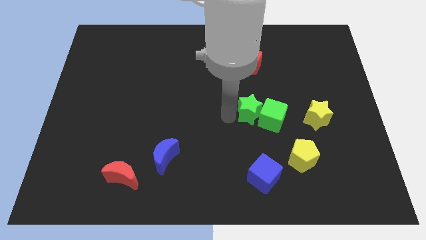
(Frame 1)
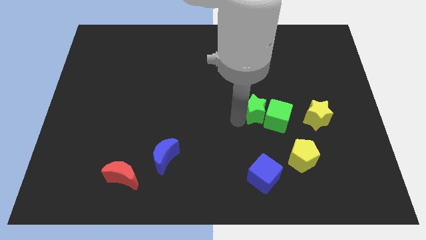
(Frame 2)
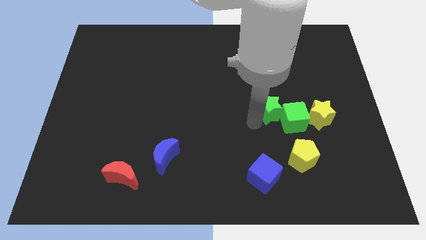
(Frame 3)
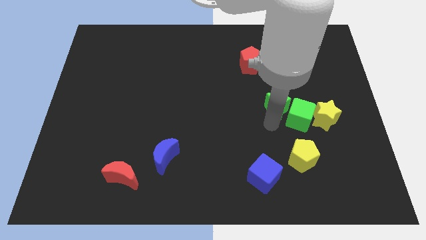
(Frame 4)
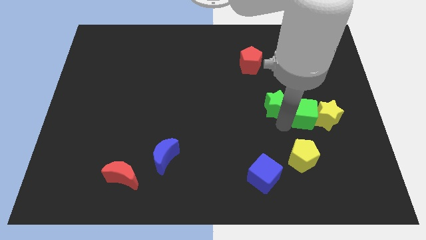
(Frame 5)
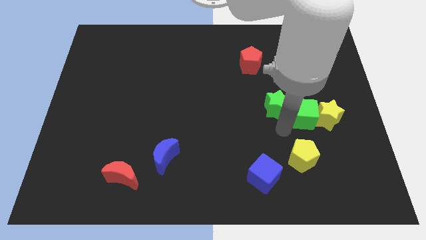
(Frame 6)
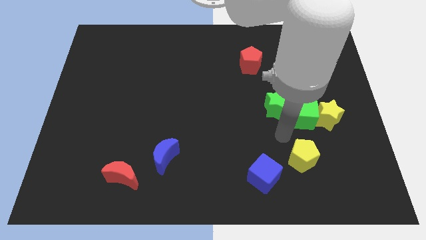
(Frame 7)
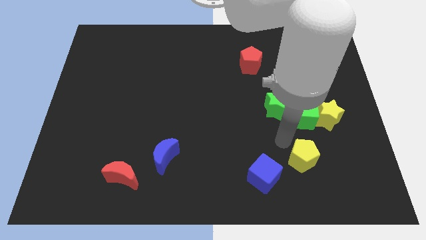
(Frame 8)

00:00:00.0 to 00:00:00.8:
move green blocks to the left of the yellow star

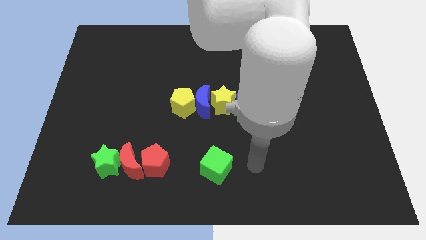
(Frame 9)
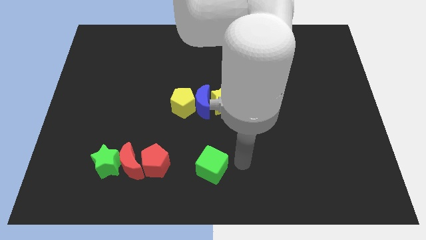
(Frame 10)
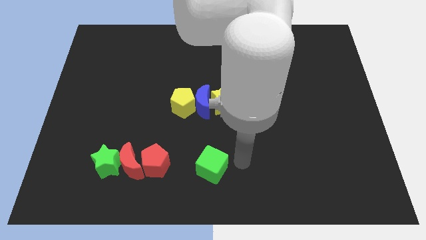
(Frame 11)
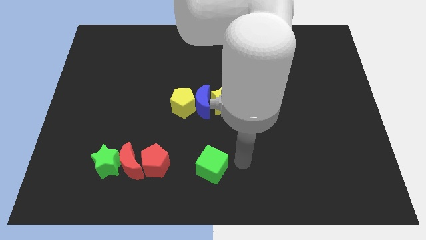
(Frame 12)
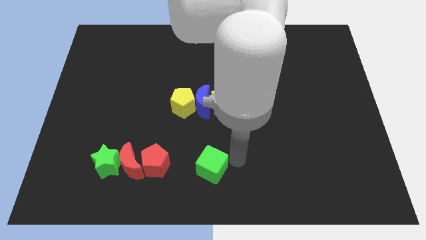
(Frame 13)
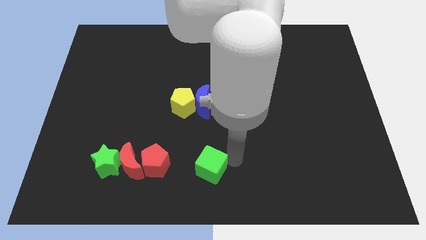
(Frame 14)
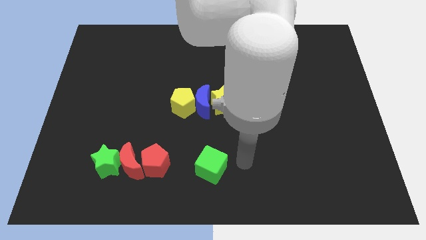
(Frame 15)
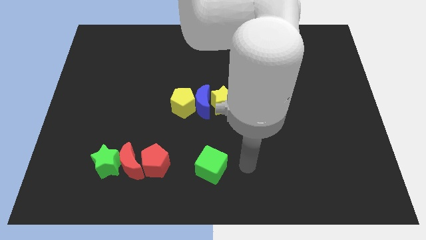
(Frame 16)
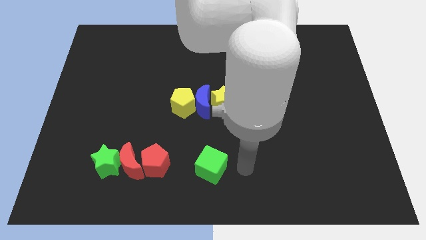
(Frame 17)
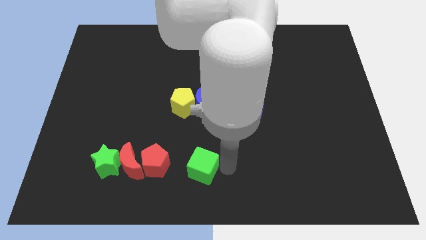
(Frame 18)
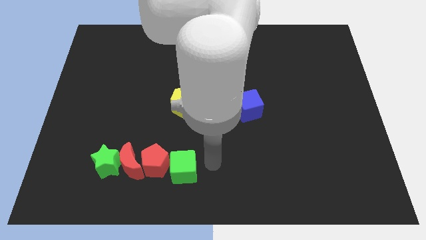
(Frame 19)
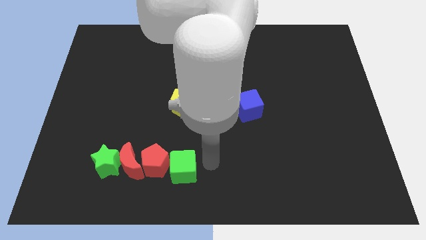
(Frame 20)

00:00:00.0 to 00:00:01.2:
place the green cube to the right of the red pentagon to form a horizontal line of blocks

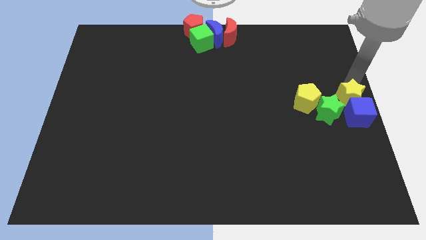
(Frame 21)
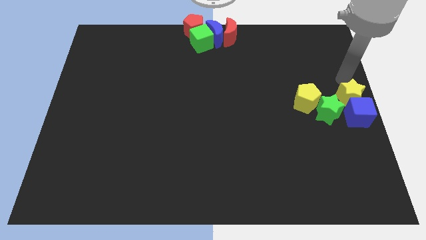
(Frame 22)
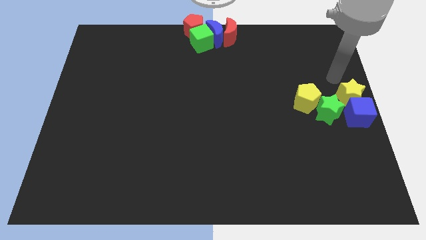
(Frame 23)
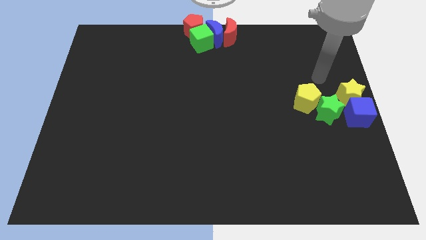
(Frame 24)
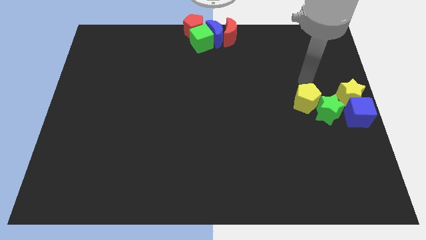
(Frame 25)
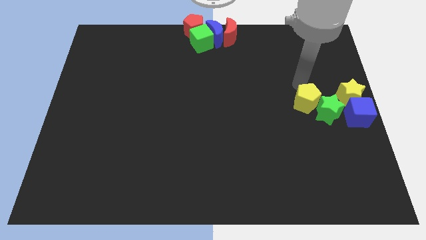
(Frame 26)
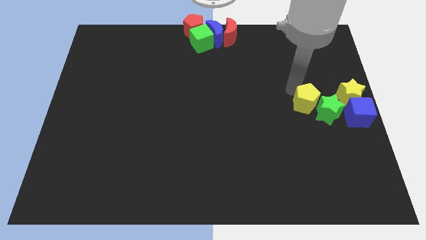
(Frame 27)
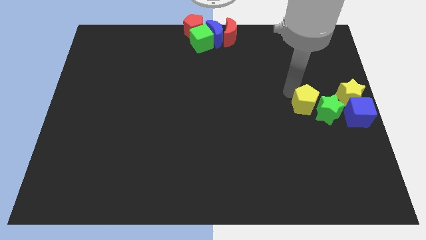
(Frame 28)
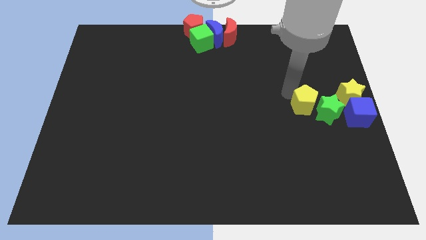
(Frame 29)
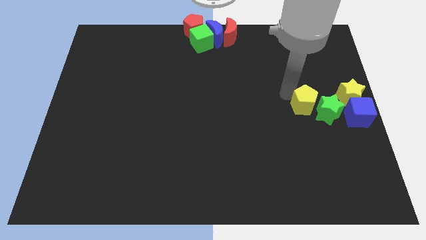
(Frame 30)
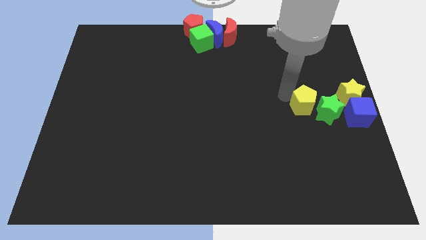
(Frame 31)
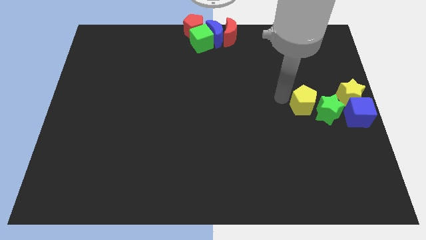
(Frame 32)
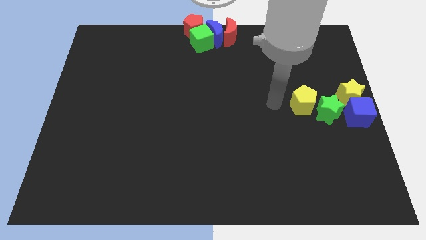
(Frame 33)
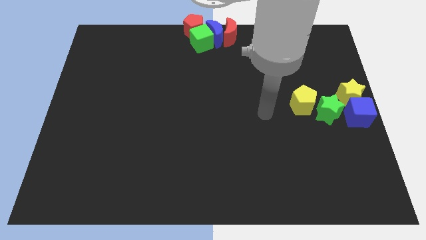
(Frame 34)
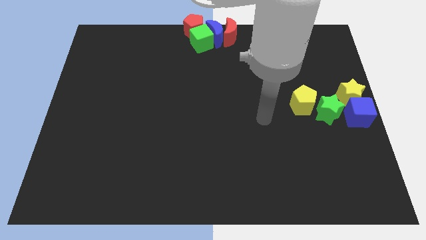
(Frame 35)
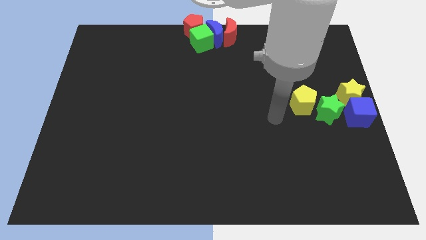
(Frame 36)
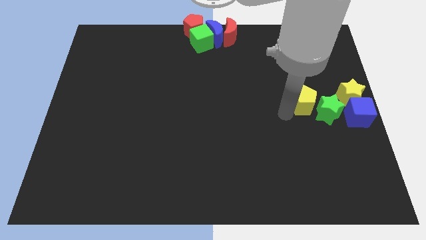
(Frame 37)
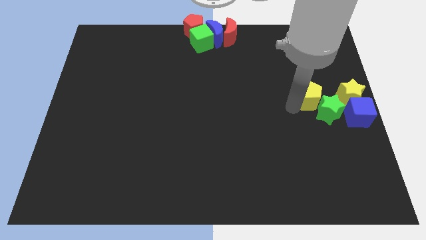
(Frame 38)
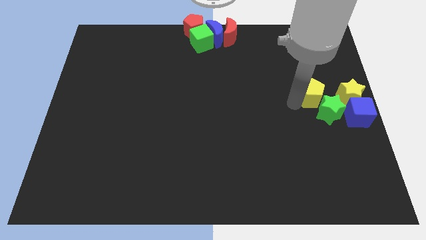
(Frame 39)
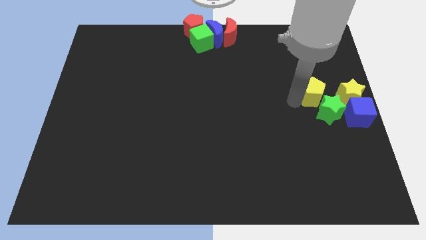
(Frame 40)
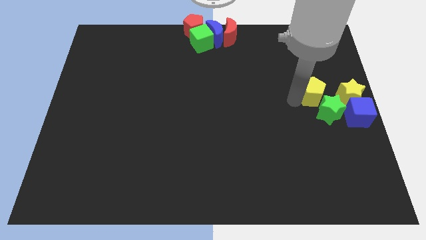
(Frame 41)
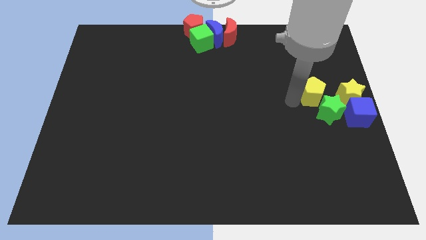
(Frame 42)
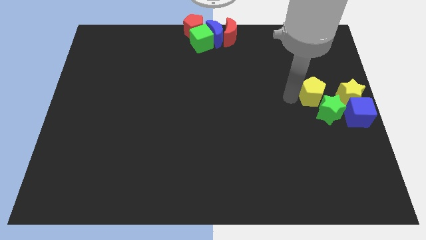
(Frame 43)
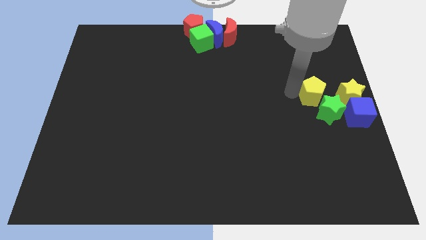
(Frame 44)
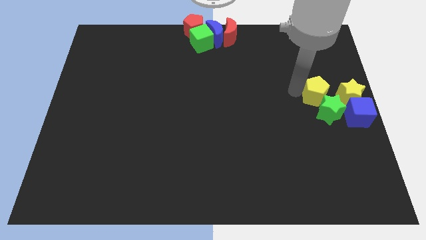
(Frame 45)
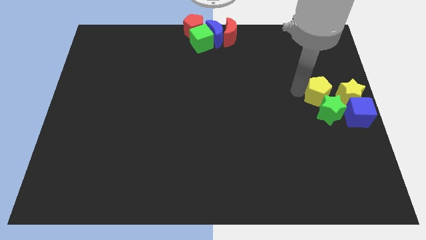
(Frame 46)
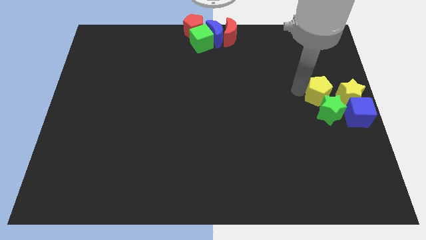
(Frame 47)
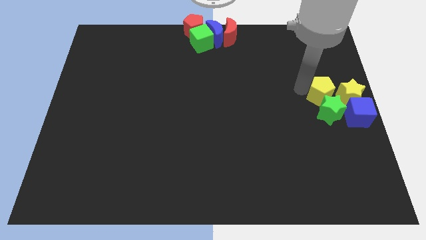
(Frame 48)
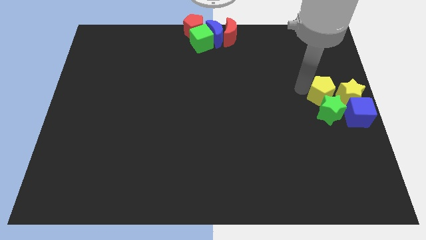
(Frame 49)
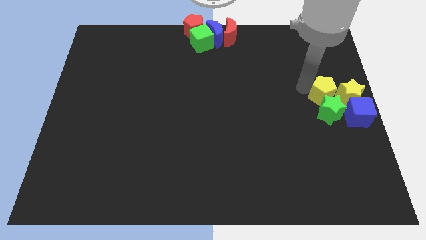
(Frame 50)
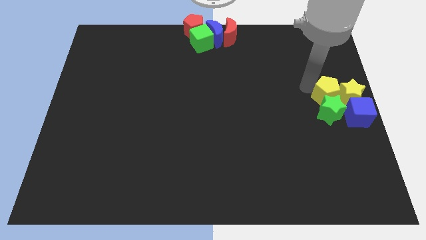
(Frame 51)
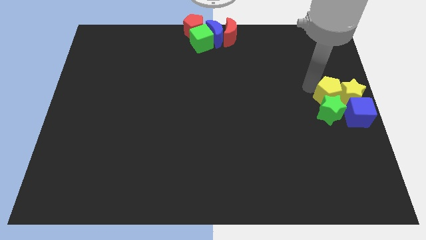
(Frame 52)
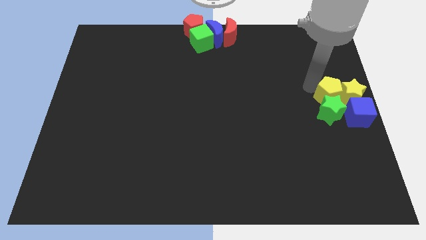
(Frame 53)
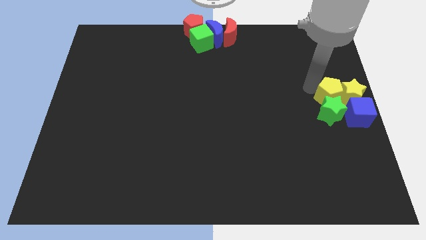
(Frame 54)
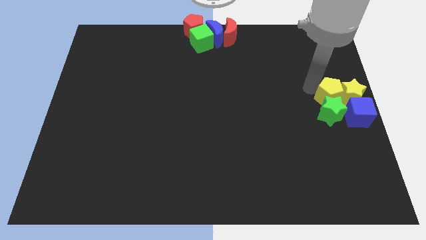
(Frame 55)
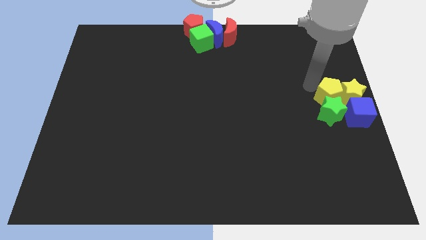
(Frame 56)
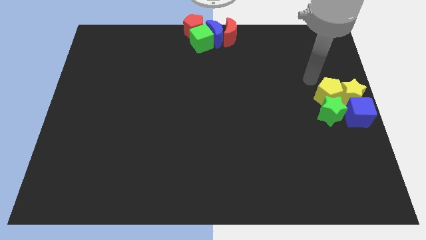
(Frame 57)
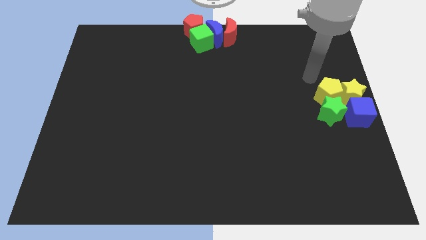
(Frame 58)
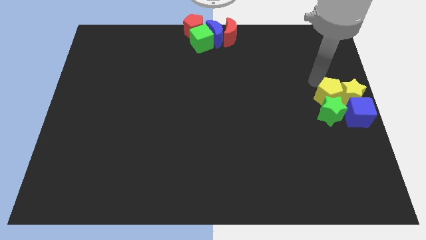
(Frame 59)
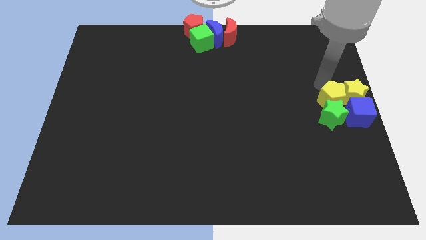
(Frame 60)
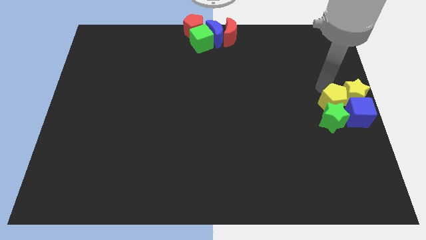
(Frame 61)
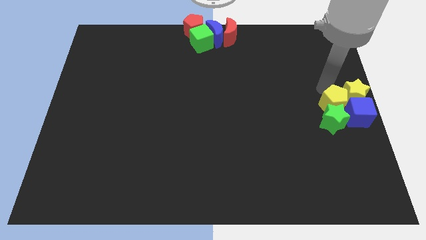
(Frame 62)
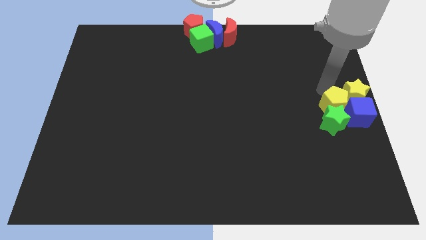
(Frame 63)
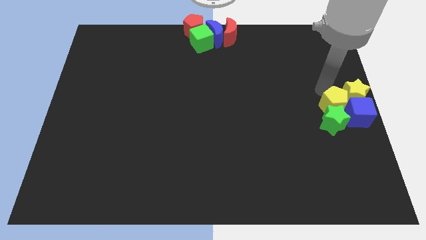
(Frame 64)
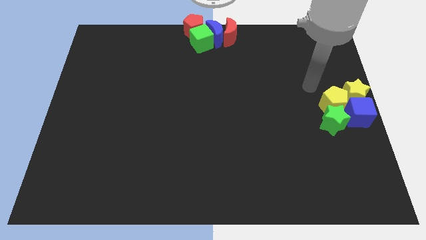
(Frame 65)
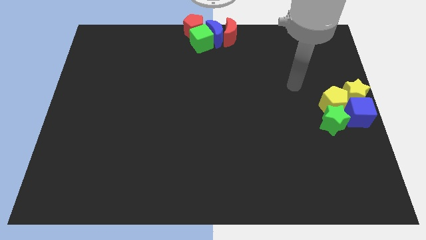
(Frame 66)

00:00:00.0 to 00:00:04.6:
push the yellow pentagon into the green star

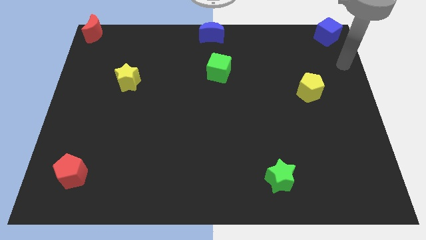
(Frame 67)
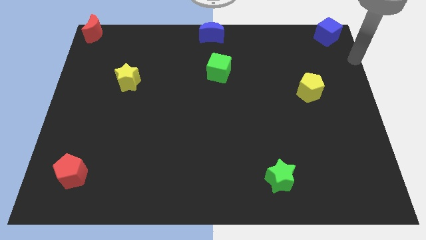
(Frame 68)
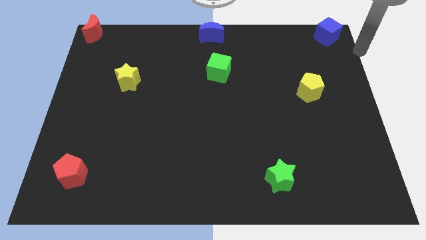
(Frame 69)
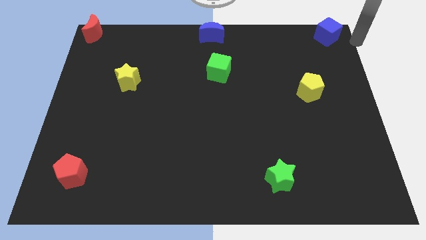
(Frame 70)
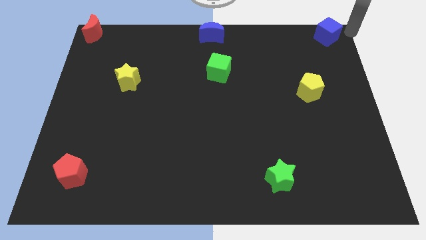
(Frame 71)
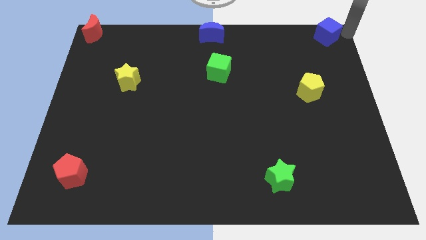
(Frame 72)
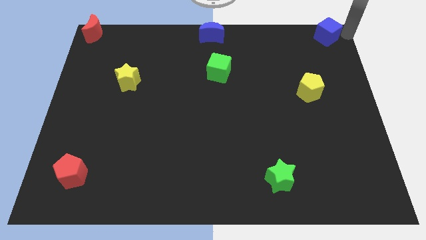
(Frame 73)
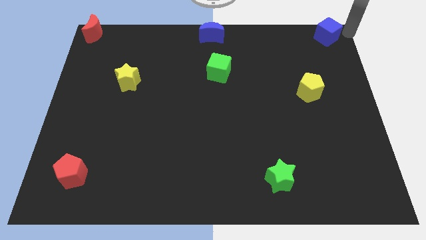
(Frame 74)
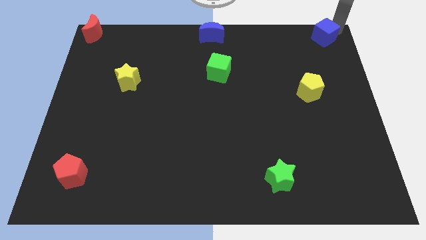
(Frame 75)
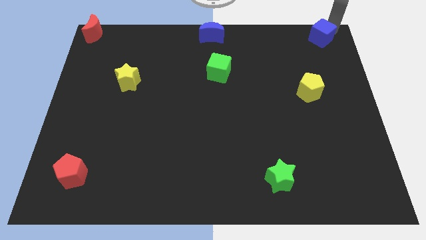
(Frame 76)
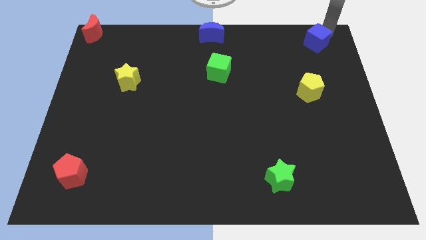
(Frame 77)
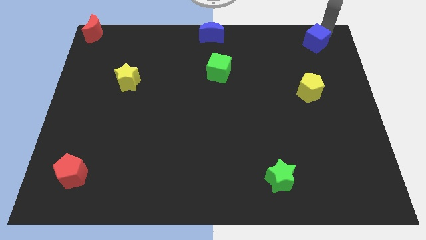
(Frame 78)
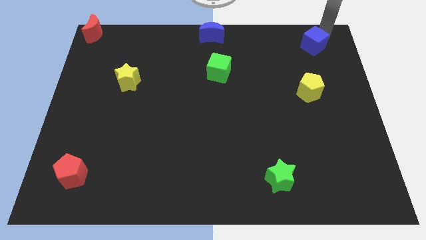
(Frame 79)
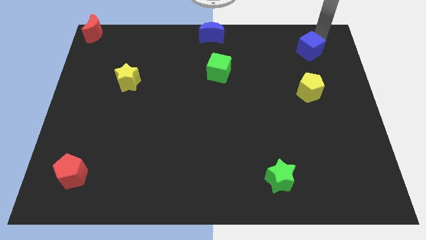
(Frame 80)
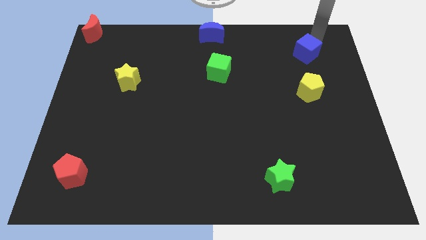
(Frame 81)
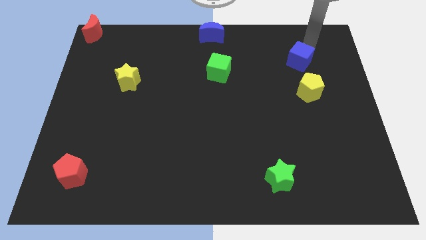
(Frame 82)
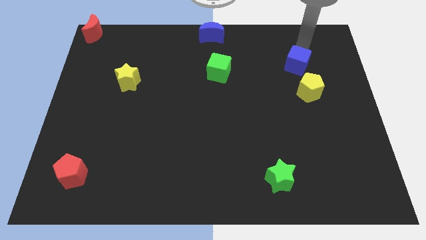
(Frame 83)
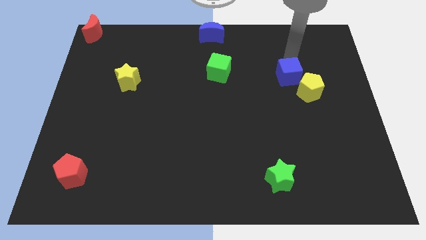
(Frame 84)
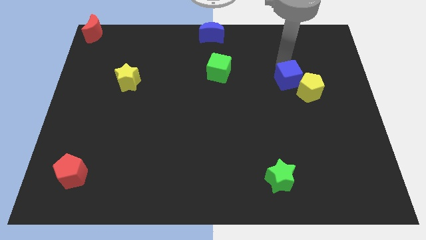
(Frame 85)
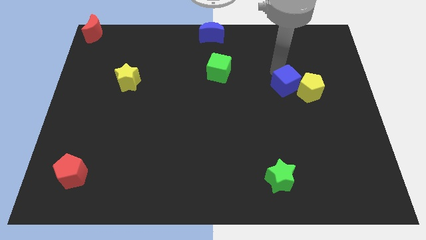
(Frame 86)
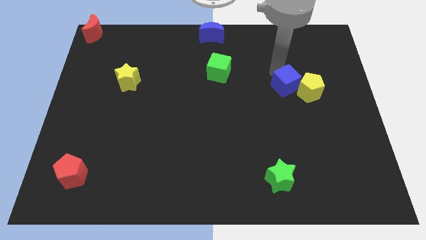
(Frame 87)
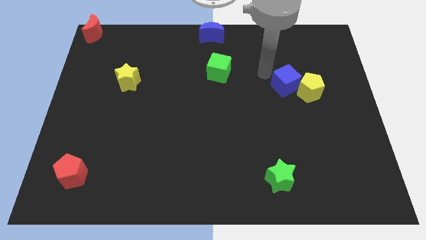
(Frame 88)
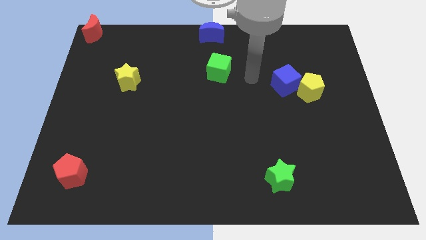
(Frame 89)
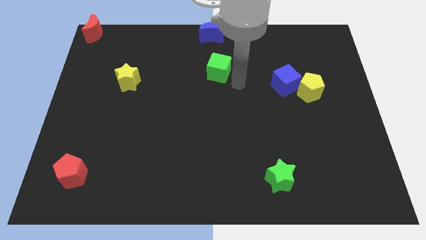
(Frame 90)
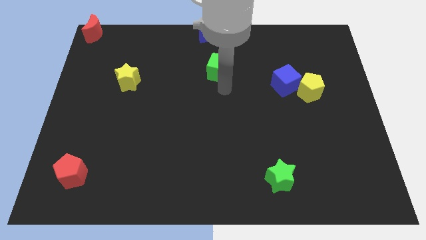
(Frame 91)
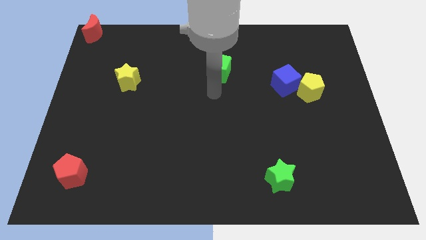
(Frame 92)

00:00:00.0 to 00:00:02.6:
push the blue cube into the yellow pentagon
